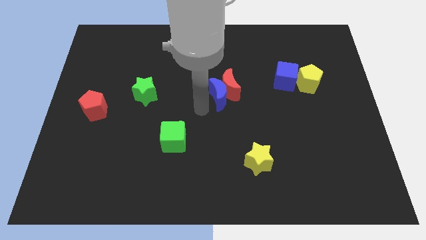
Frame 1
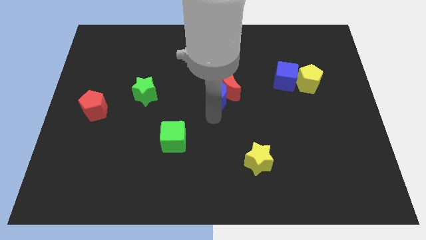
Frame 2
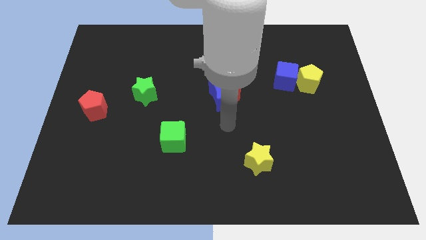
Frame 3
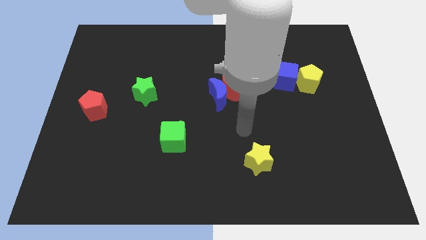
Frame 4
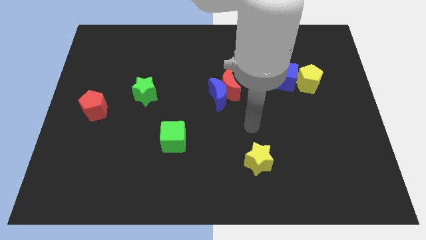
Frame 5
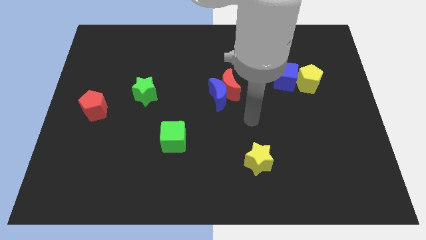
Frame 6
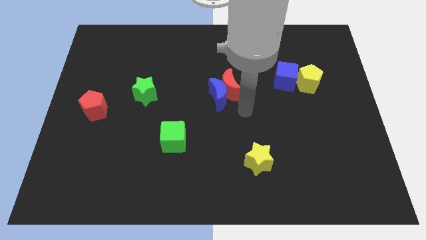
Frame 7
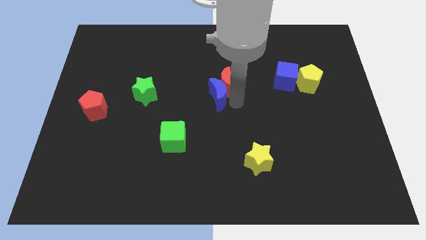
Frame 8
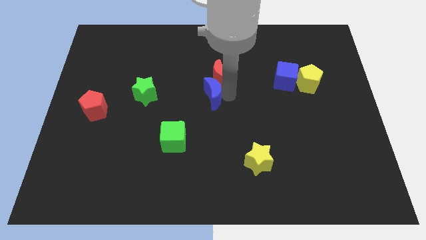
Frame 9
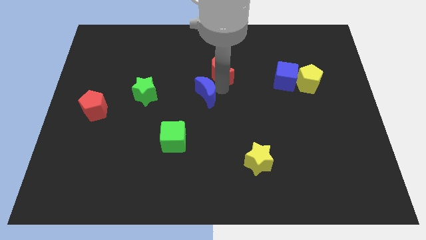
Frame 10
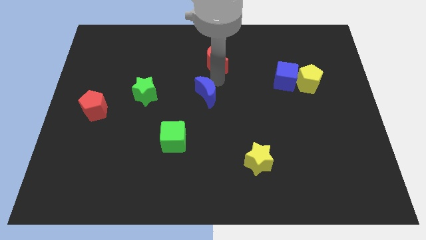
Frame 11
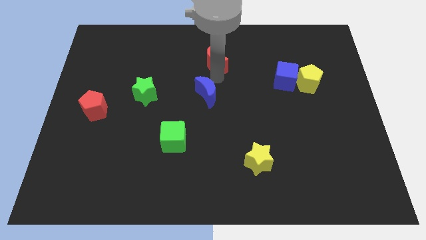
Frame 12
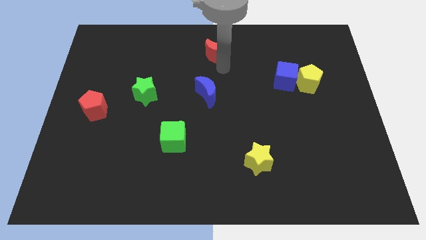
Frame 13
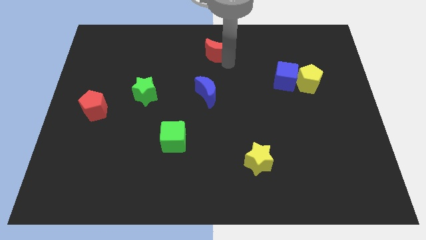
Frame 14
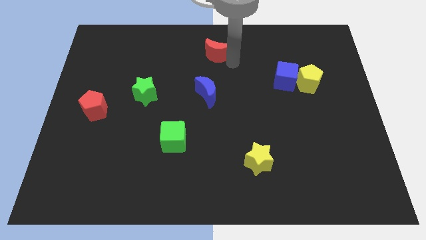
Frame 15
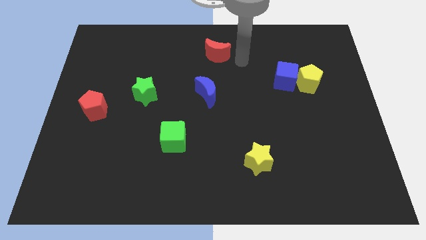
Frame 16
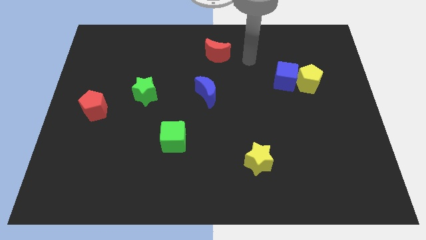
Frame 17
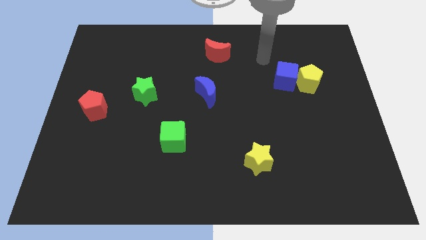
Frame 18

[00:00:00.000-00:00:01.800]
separate the blue moon and red moon

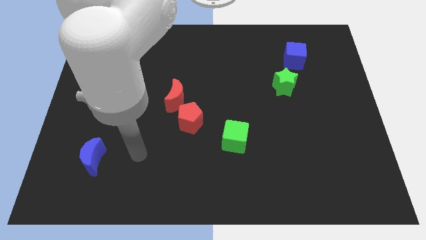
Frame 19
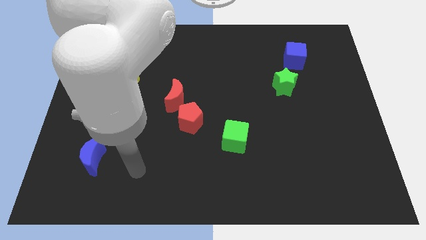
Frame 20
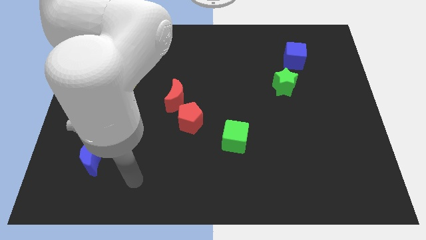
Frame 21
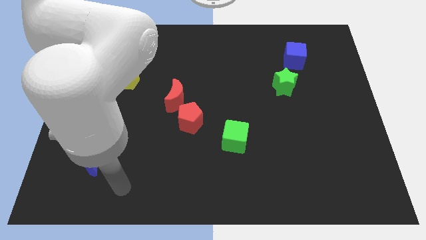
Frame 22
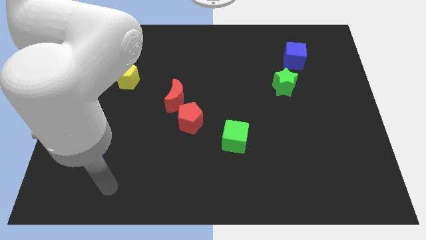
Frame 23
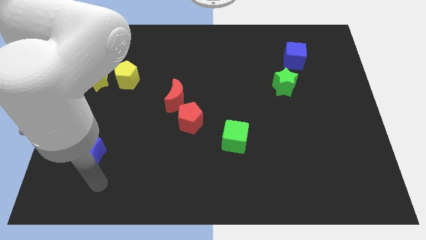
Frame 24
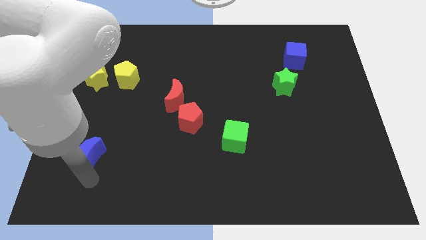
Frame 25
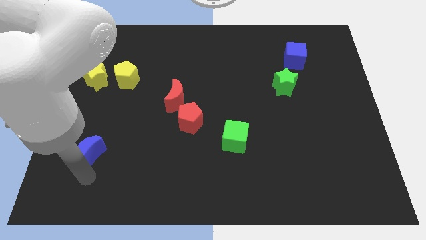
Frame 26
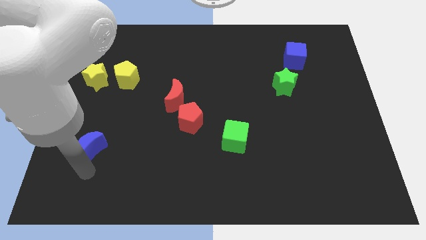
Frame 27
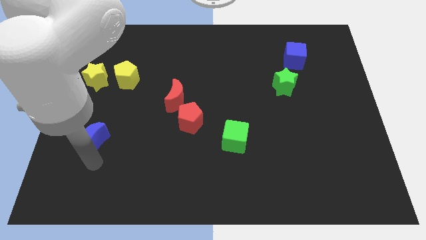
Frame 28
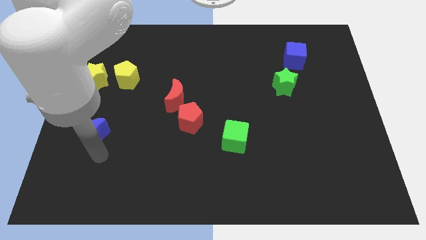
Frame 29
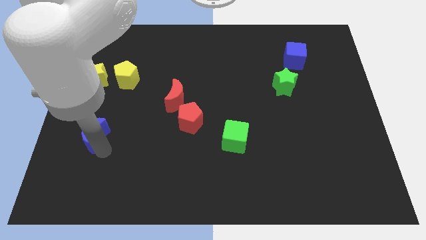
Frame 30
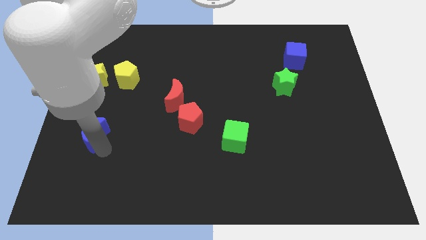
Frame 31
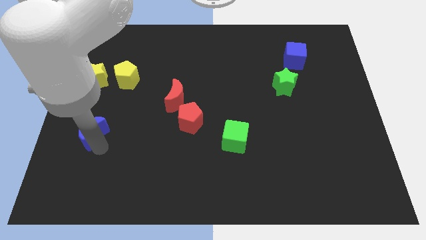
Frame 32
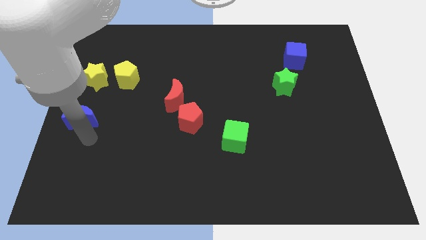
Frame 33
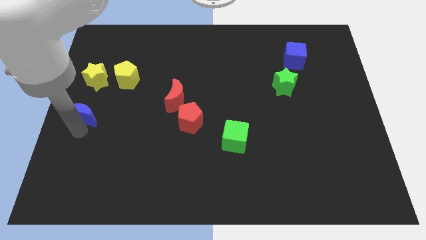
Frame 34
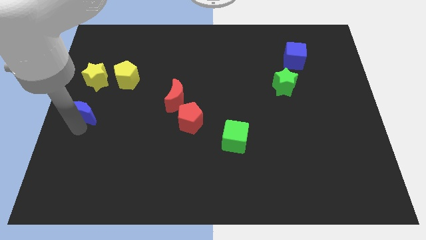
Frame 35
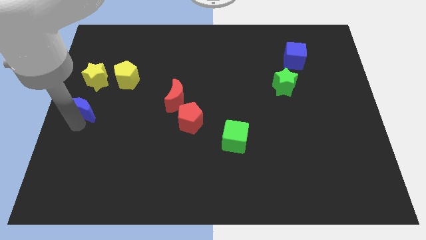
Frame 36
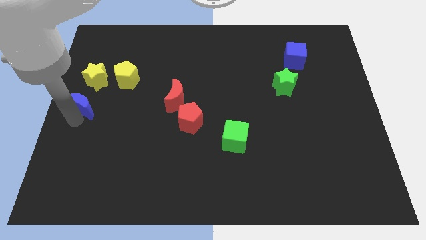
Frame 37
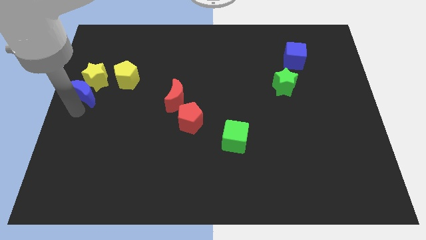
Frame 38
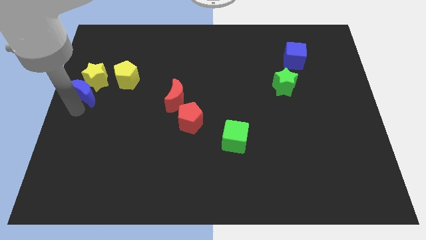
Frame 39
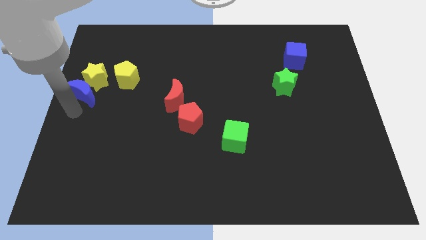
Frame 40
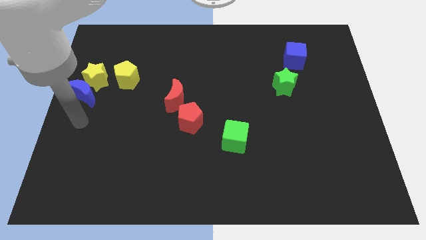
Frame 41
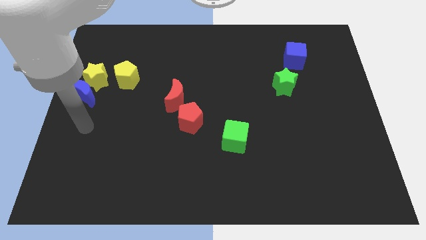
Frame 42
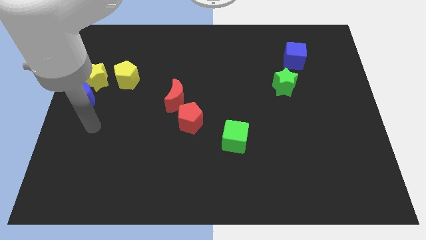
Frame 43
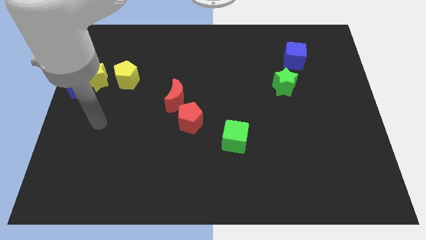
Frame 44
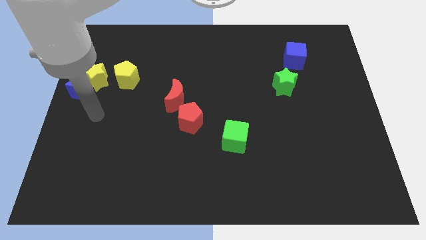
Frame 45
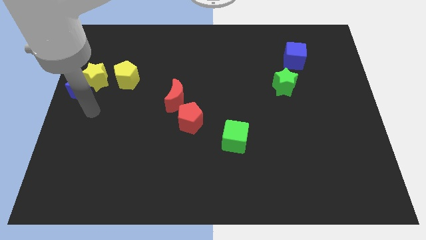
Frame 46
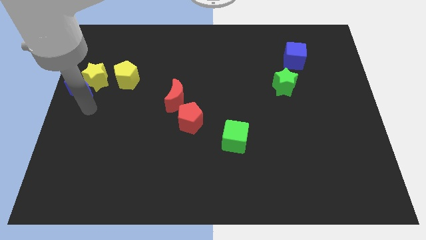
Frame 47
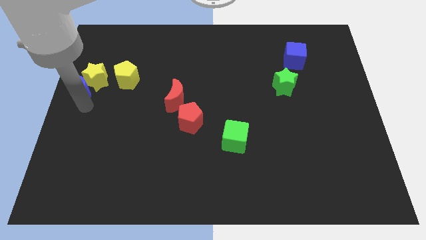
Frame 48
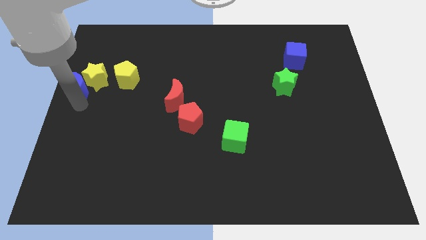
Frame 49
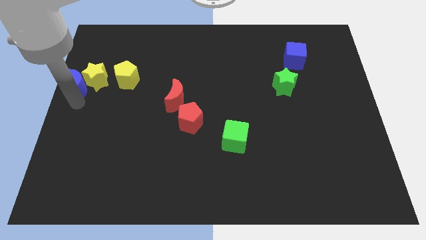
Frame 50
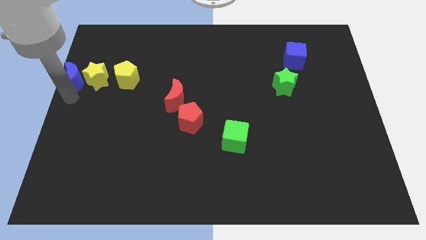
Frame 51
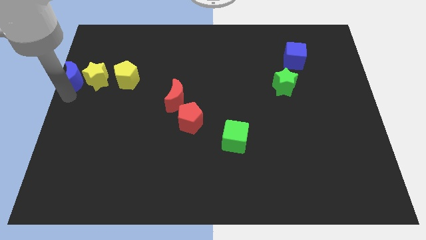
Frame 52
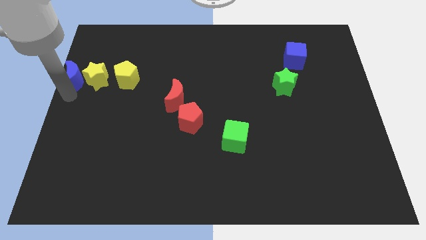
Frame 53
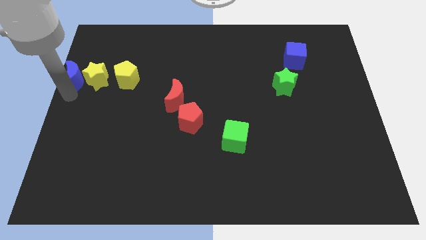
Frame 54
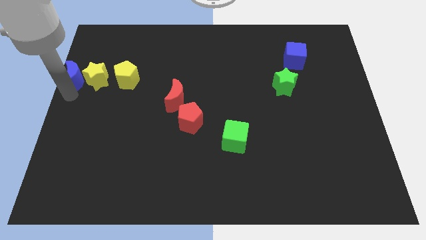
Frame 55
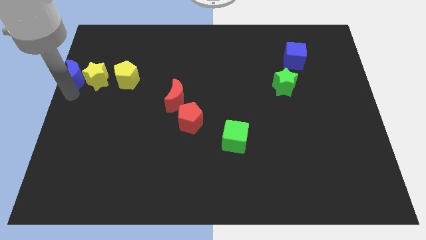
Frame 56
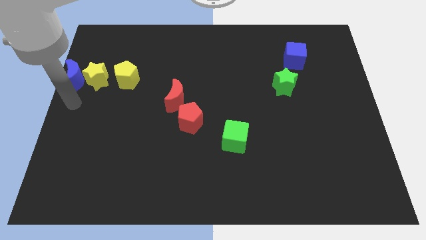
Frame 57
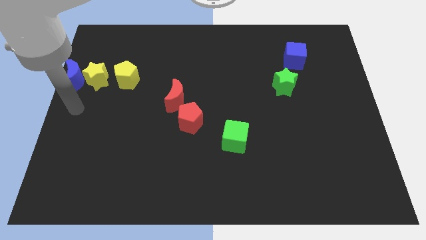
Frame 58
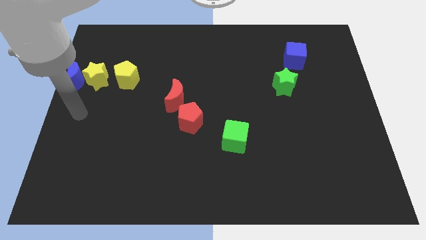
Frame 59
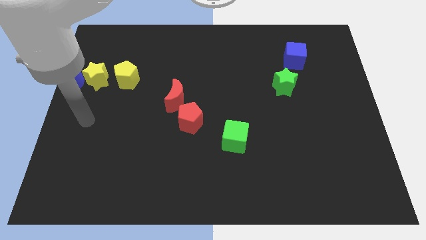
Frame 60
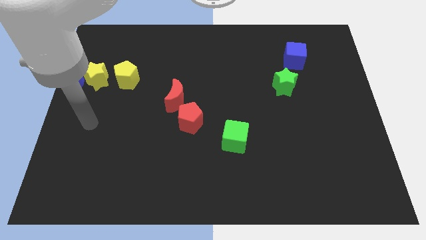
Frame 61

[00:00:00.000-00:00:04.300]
push the blue moon to the left side of the yellow star

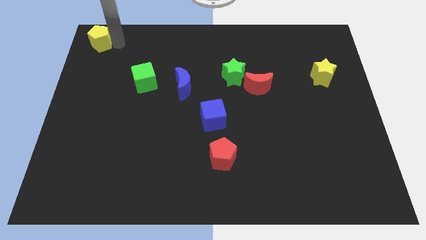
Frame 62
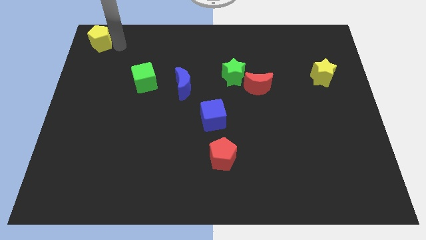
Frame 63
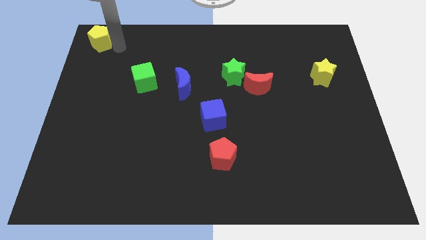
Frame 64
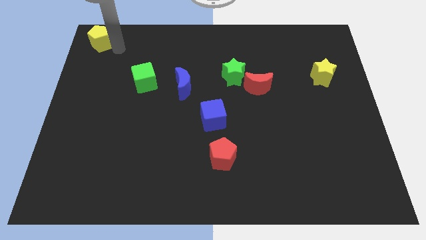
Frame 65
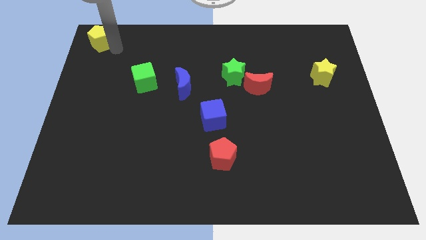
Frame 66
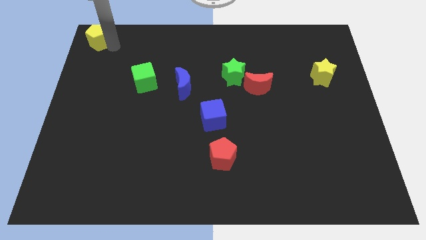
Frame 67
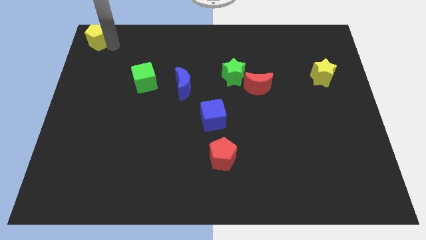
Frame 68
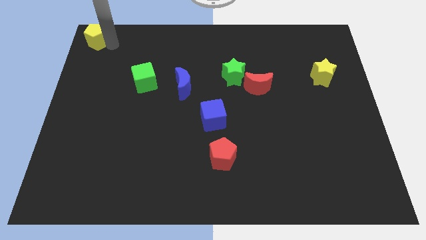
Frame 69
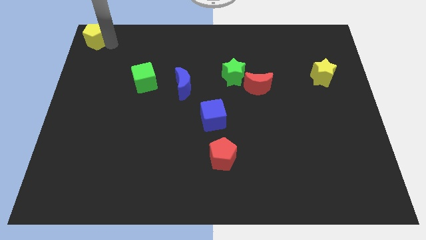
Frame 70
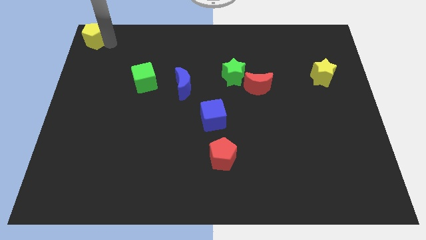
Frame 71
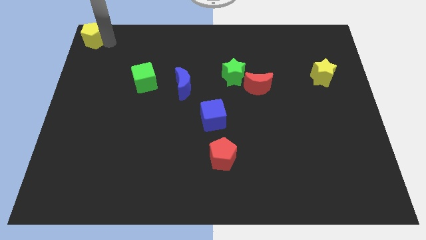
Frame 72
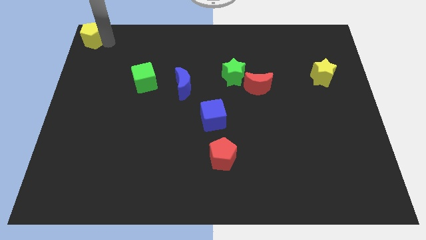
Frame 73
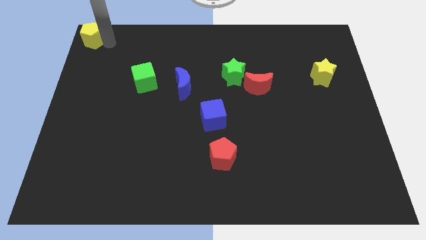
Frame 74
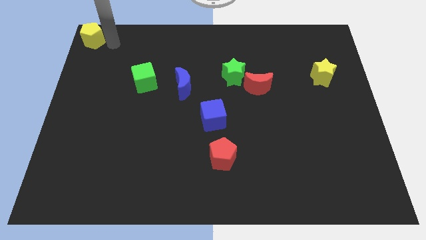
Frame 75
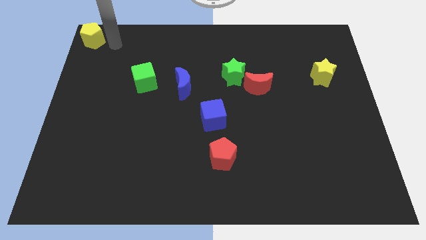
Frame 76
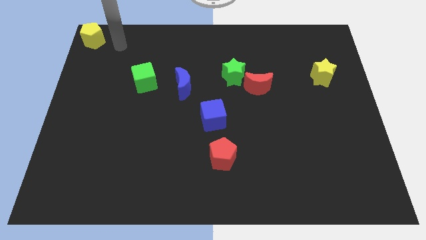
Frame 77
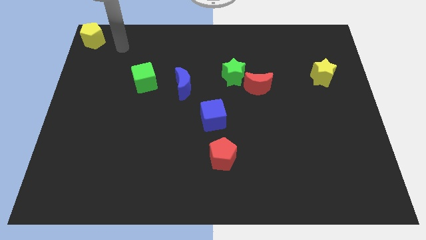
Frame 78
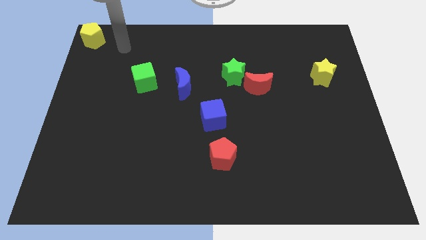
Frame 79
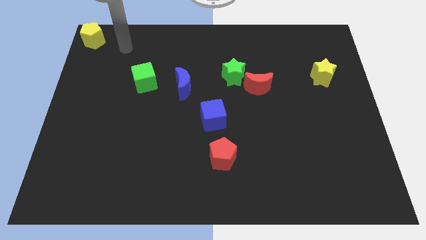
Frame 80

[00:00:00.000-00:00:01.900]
slightly push the yellow pentagon to the top left corner of the board

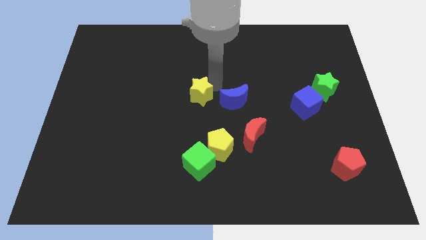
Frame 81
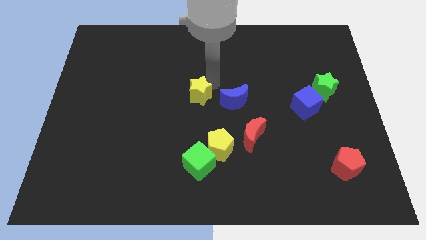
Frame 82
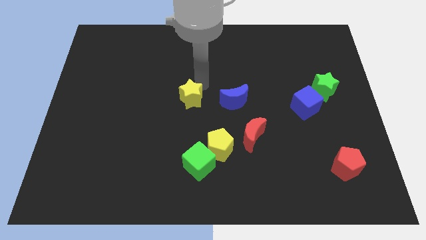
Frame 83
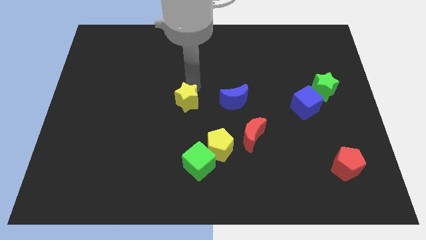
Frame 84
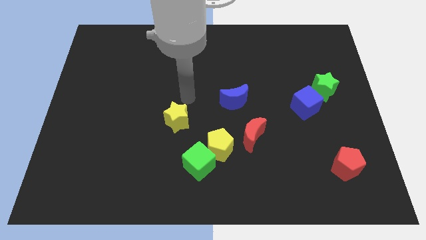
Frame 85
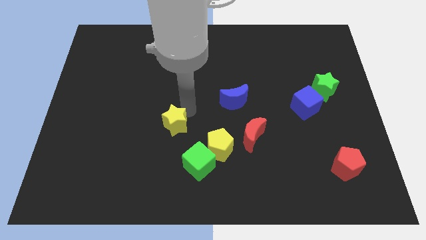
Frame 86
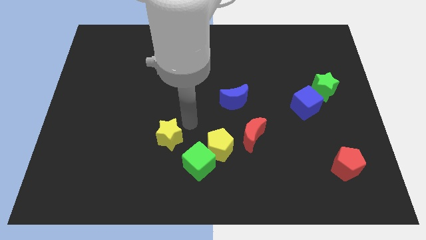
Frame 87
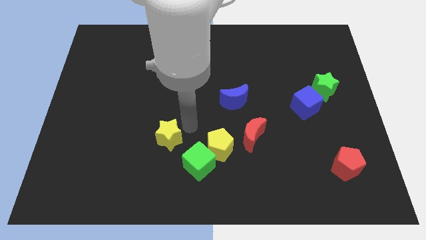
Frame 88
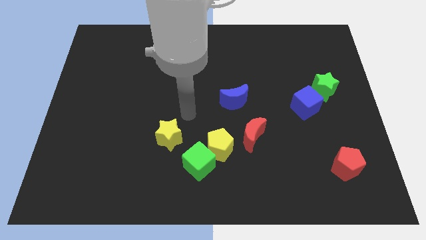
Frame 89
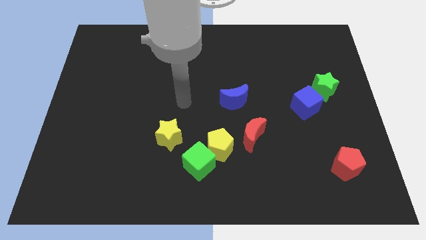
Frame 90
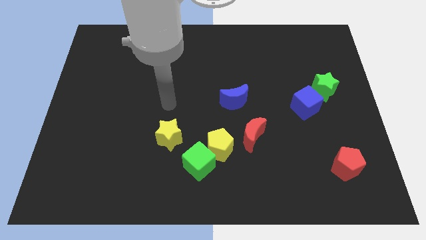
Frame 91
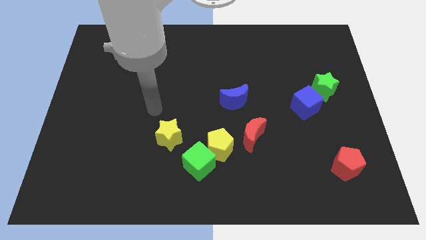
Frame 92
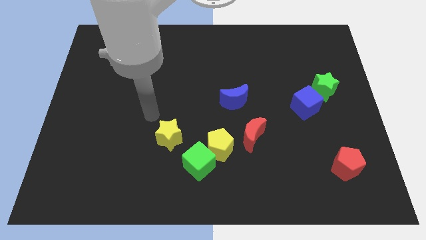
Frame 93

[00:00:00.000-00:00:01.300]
push the yellow star diagonal to green cube
